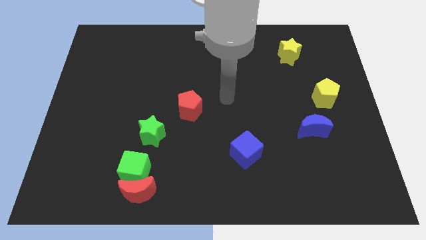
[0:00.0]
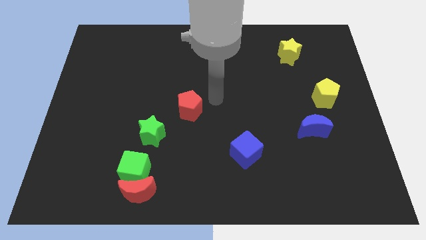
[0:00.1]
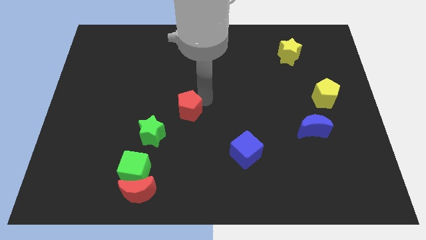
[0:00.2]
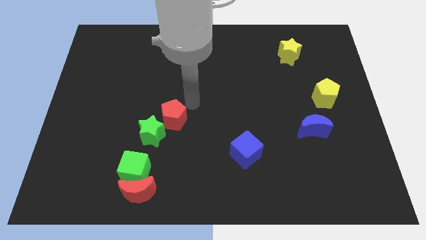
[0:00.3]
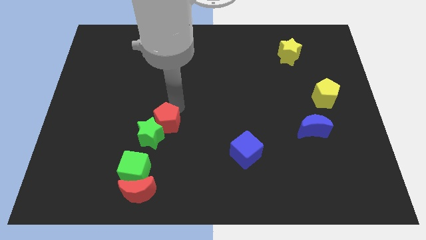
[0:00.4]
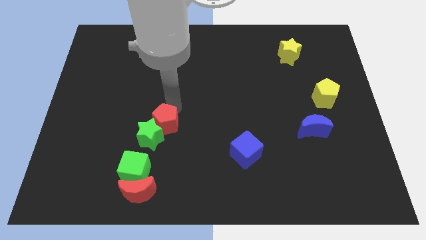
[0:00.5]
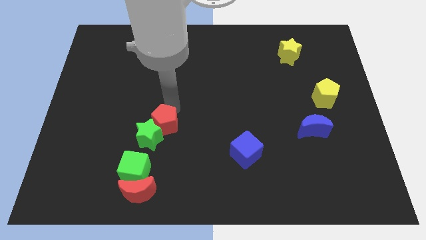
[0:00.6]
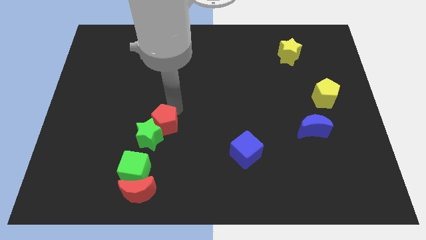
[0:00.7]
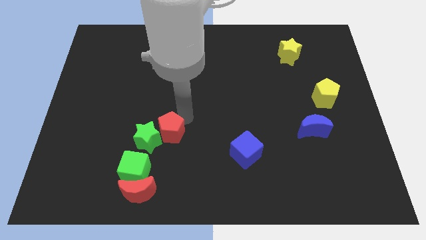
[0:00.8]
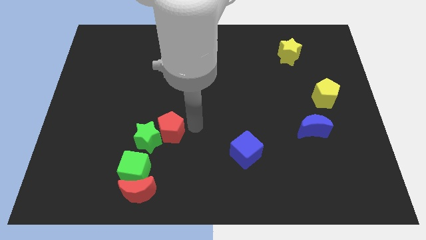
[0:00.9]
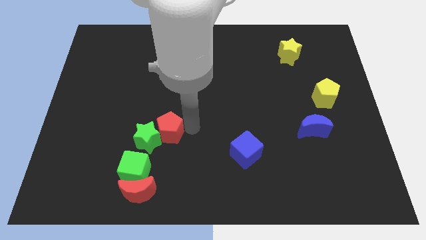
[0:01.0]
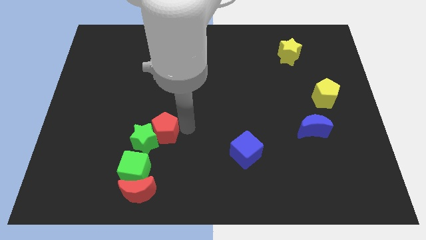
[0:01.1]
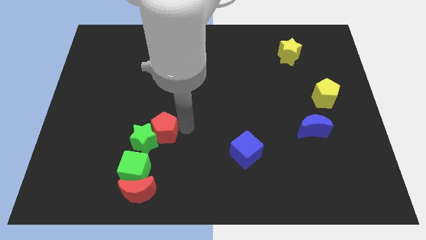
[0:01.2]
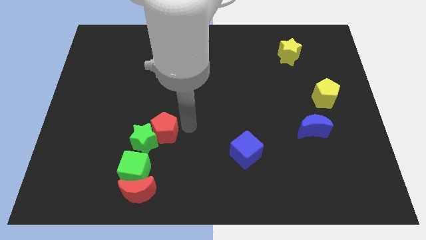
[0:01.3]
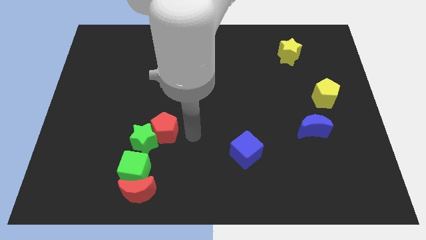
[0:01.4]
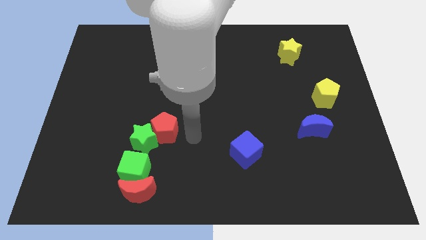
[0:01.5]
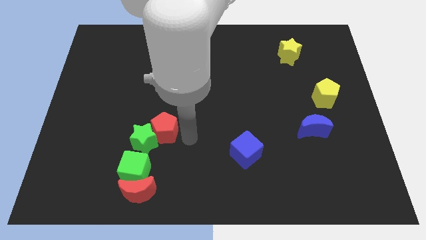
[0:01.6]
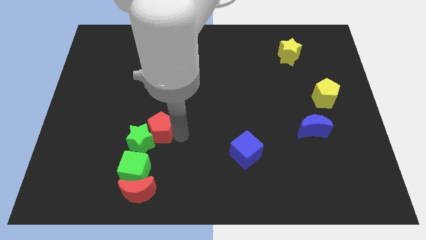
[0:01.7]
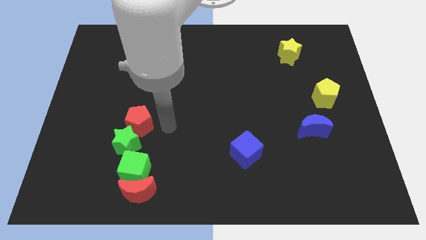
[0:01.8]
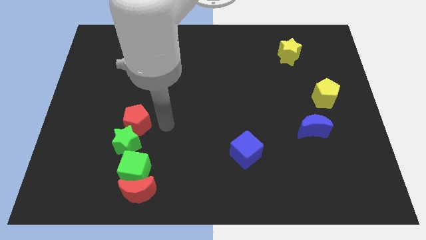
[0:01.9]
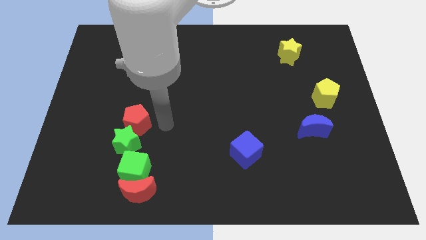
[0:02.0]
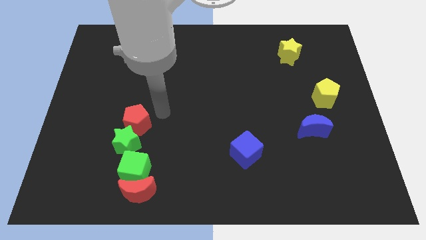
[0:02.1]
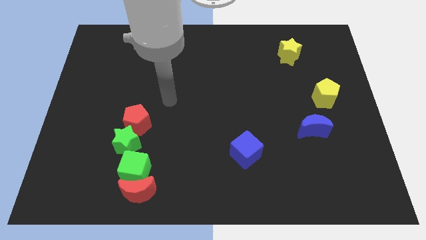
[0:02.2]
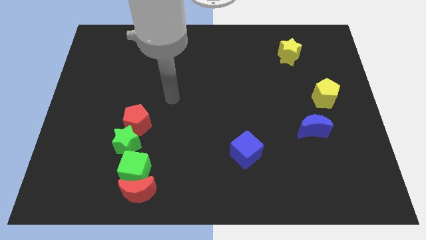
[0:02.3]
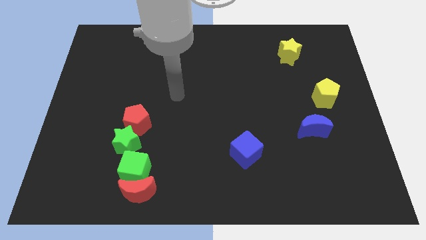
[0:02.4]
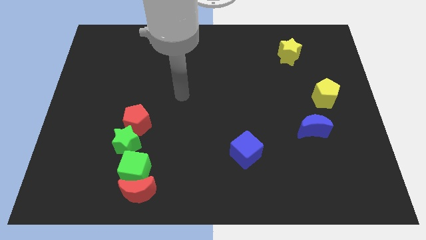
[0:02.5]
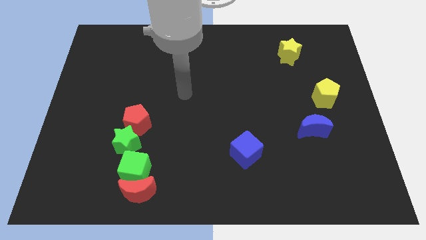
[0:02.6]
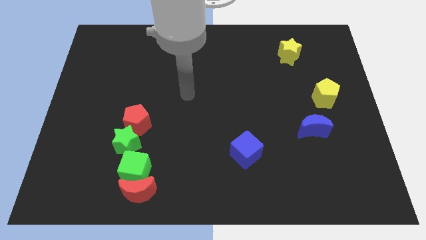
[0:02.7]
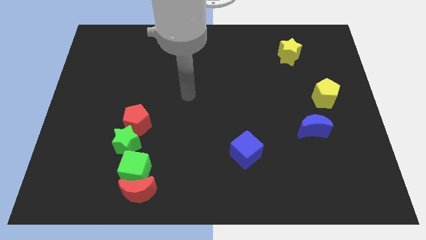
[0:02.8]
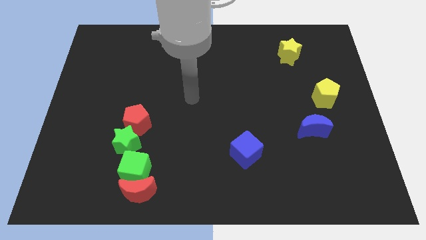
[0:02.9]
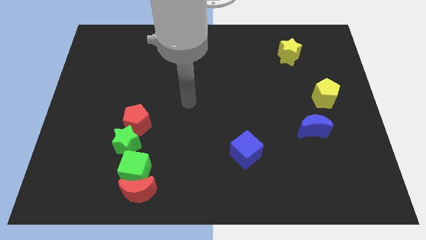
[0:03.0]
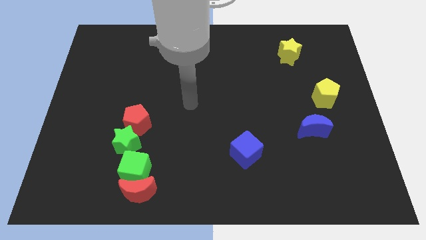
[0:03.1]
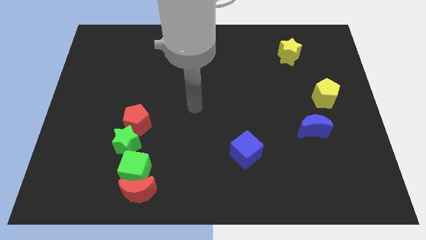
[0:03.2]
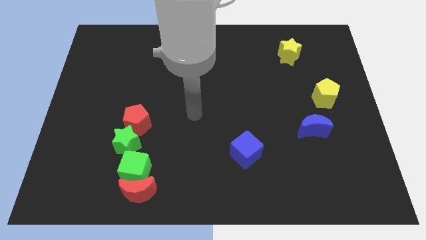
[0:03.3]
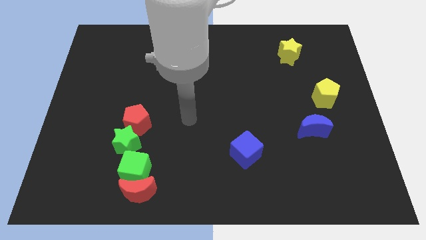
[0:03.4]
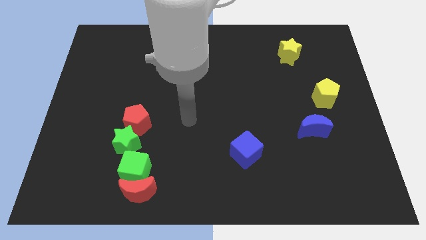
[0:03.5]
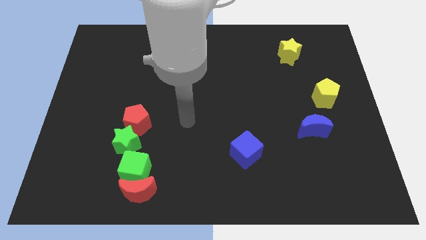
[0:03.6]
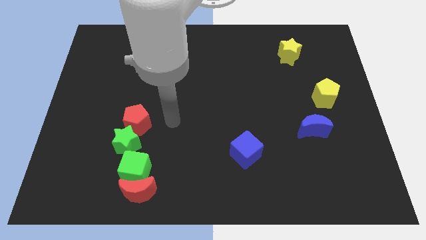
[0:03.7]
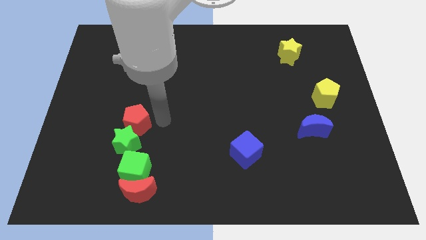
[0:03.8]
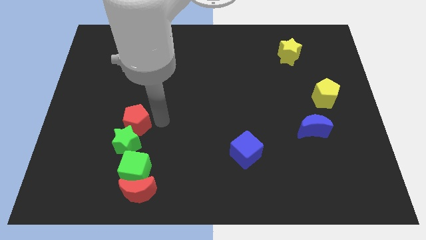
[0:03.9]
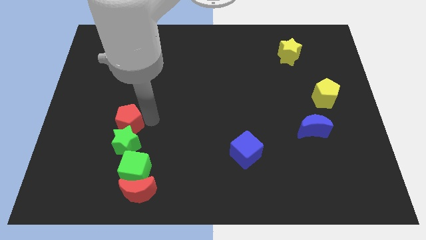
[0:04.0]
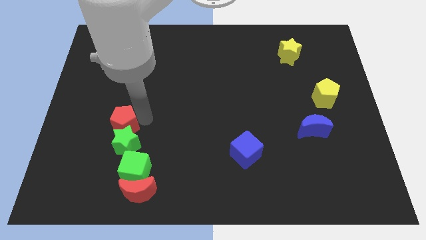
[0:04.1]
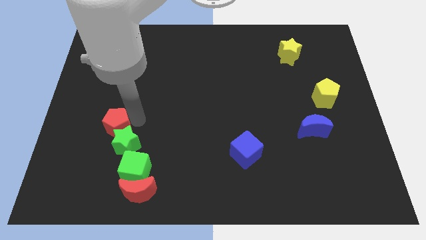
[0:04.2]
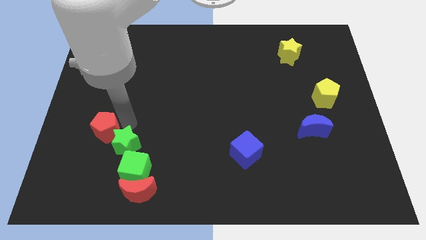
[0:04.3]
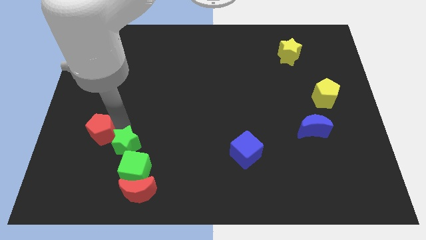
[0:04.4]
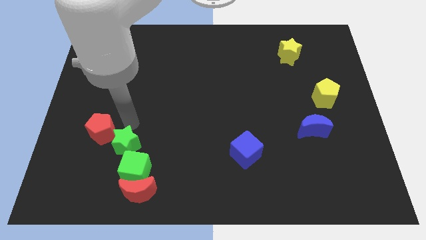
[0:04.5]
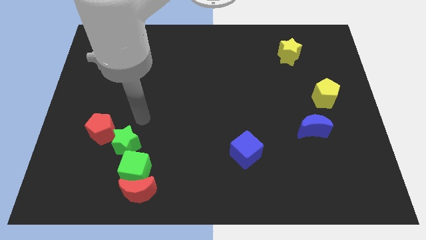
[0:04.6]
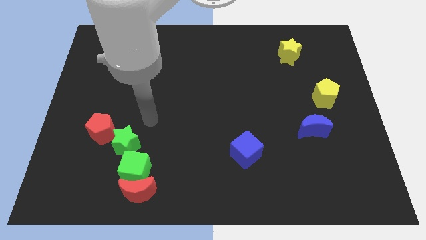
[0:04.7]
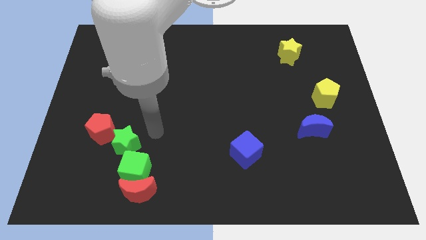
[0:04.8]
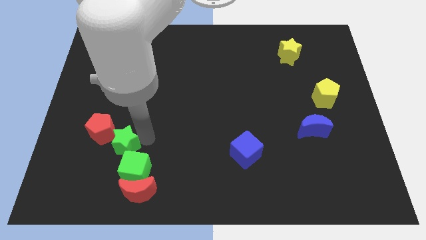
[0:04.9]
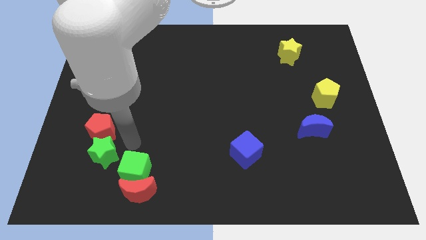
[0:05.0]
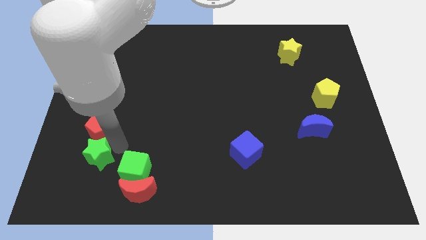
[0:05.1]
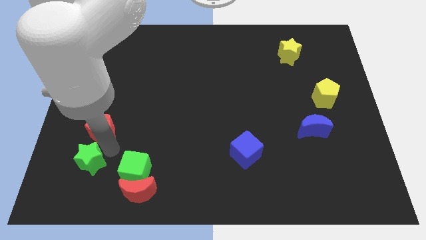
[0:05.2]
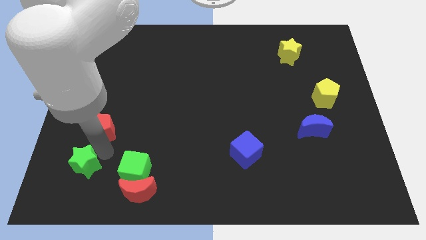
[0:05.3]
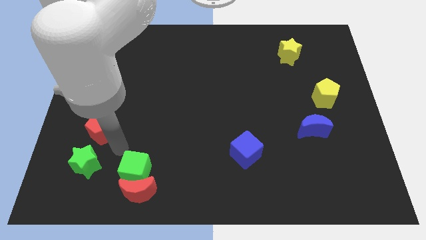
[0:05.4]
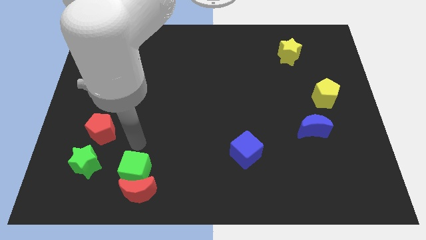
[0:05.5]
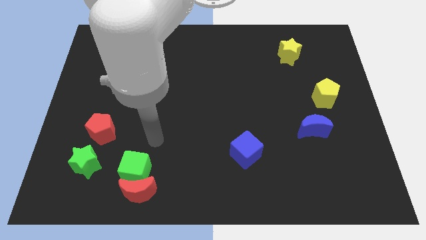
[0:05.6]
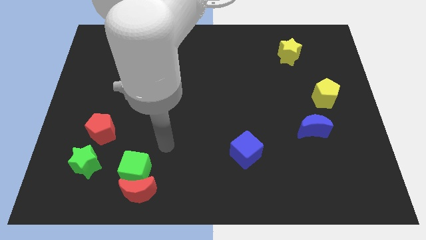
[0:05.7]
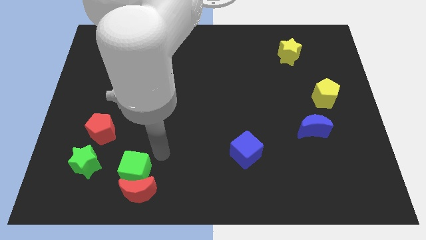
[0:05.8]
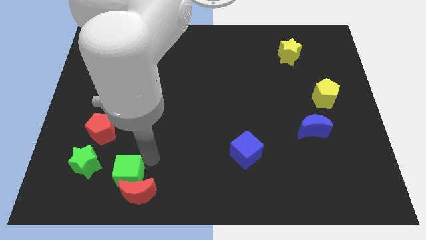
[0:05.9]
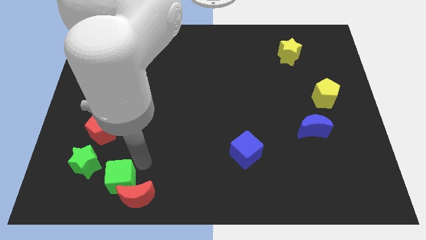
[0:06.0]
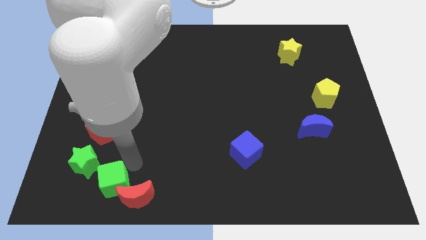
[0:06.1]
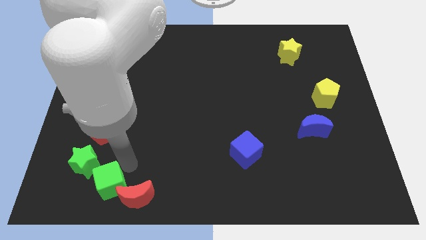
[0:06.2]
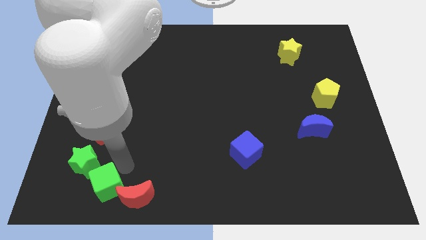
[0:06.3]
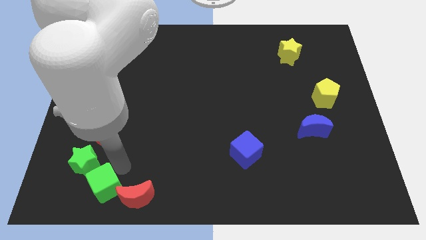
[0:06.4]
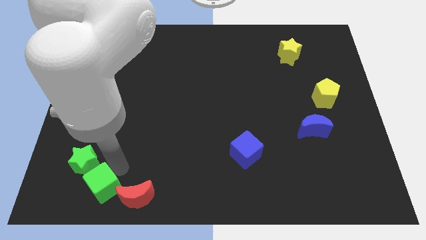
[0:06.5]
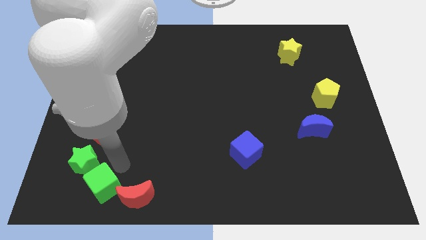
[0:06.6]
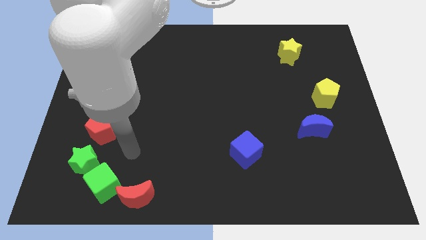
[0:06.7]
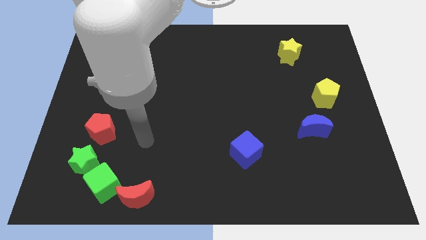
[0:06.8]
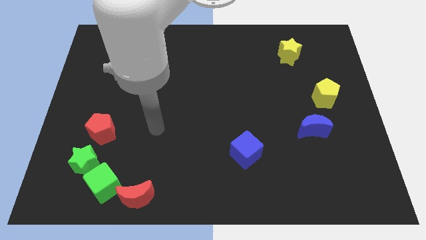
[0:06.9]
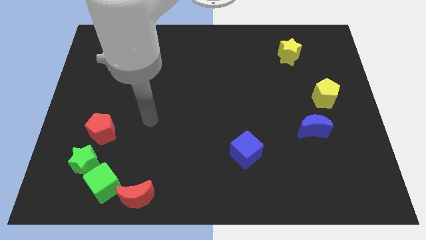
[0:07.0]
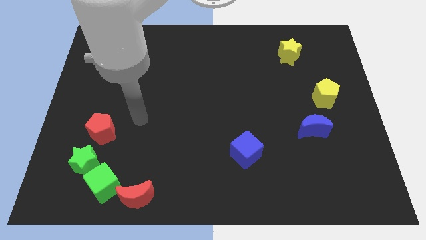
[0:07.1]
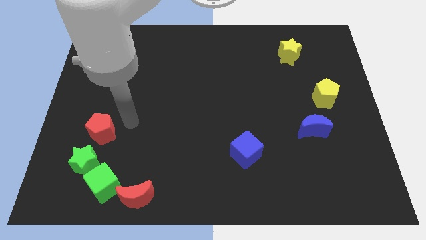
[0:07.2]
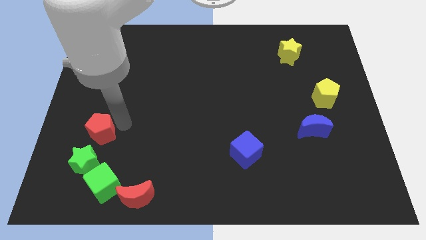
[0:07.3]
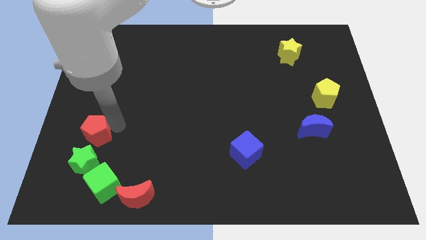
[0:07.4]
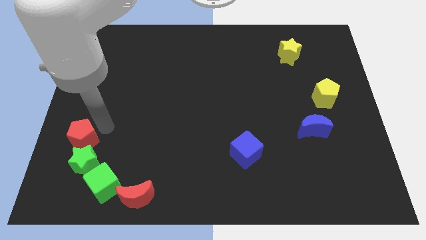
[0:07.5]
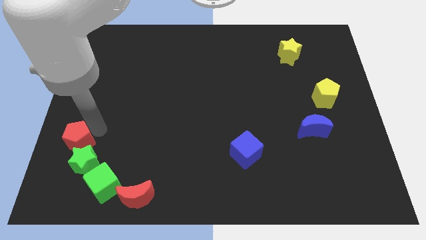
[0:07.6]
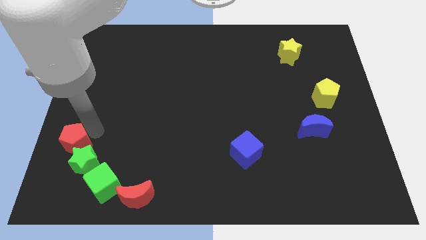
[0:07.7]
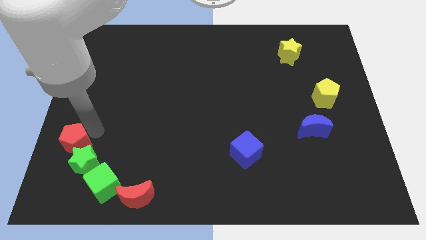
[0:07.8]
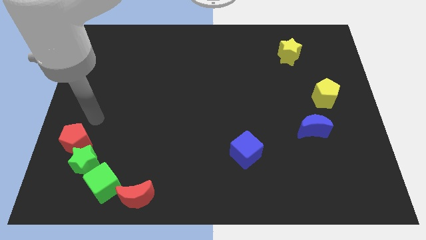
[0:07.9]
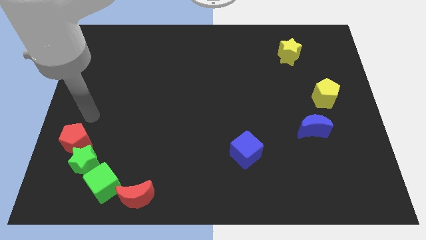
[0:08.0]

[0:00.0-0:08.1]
move red pentagon to the bottom left corner of the board

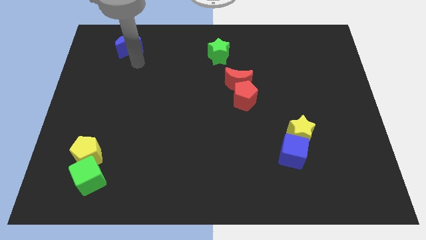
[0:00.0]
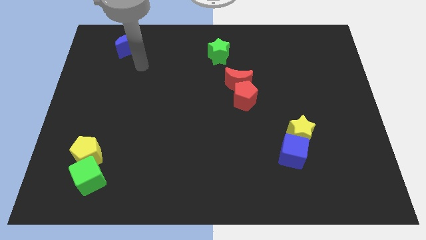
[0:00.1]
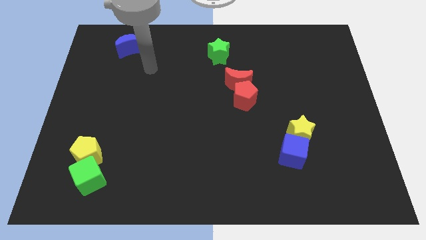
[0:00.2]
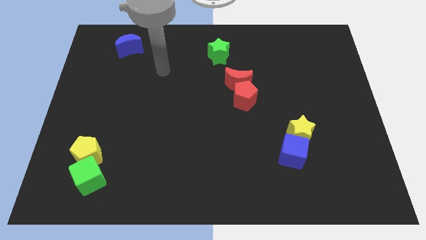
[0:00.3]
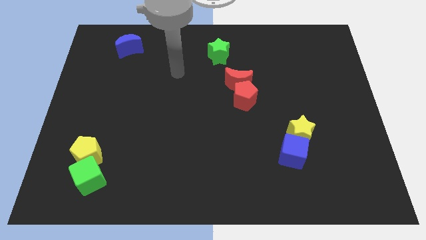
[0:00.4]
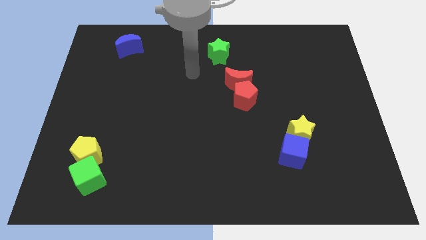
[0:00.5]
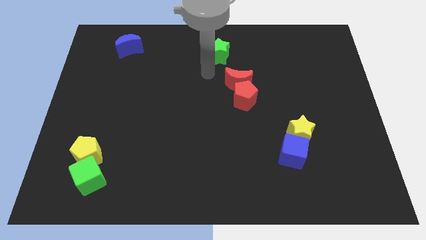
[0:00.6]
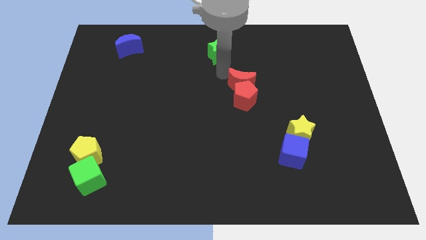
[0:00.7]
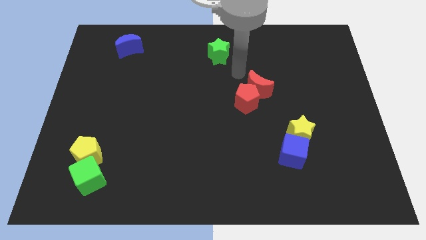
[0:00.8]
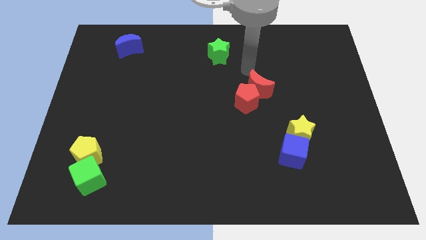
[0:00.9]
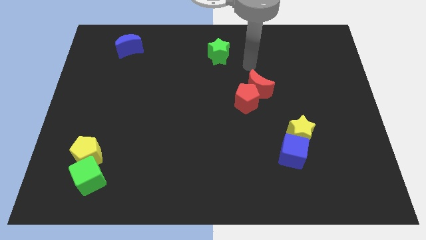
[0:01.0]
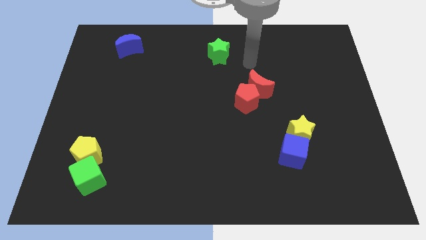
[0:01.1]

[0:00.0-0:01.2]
move your arm away from the blue moon
